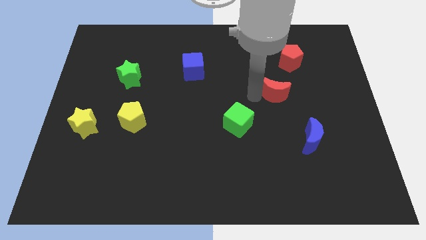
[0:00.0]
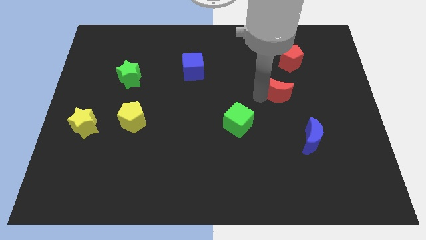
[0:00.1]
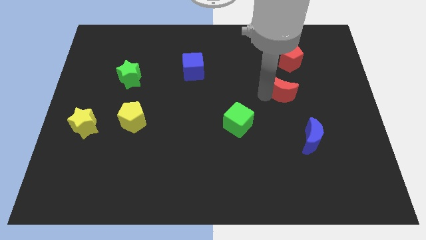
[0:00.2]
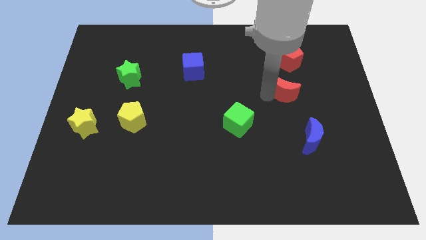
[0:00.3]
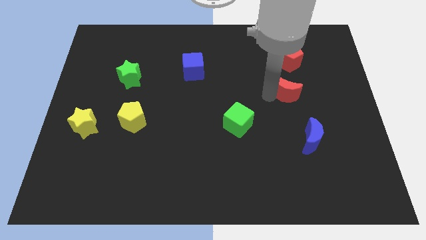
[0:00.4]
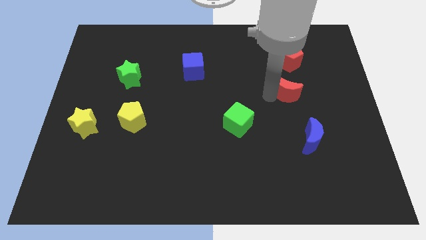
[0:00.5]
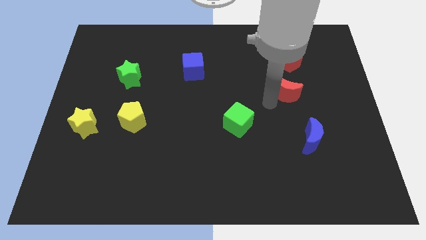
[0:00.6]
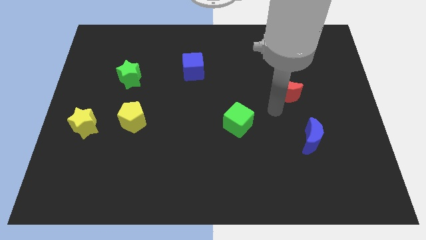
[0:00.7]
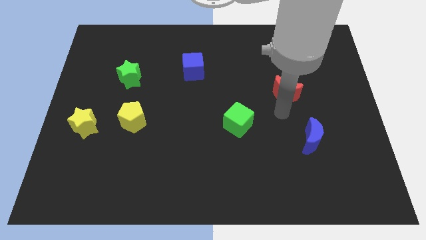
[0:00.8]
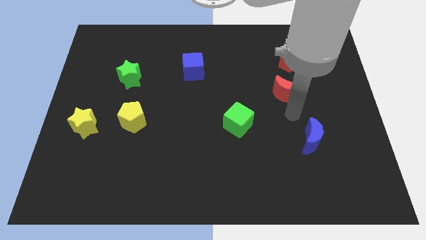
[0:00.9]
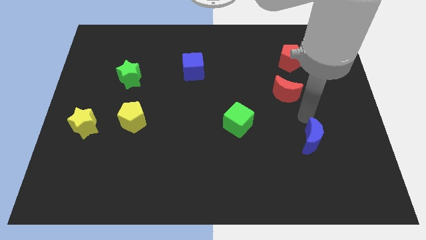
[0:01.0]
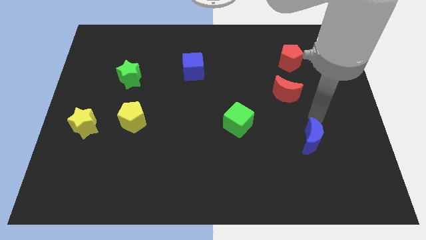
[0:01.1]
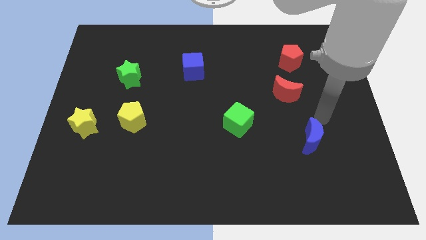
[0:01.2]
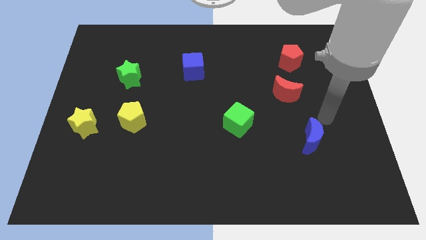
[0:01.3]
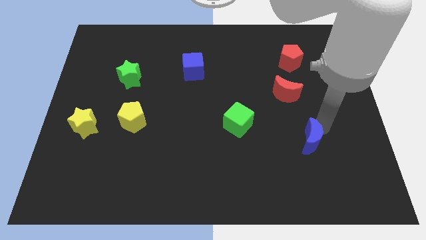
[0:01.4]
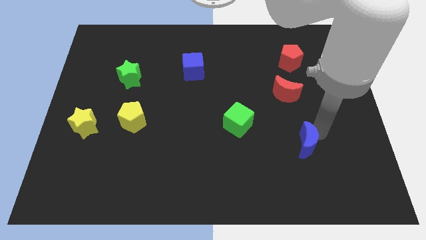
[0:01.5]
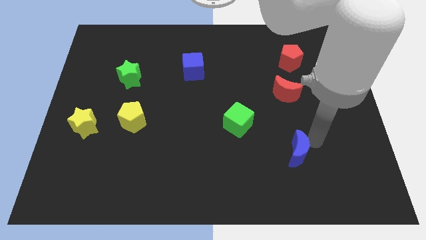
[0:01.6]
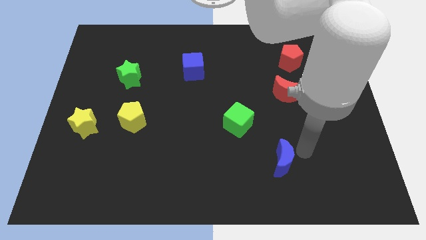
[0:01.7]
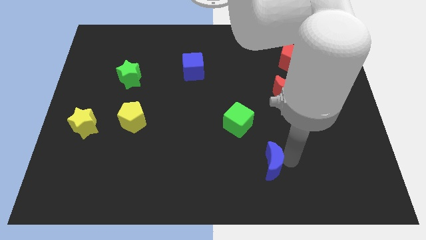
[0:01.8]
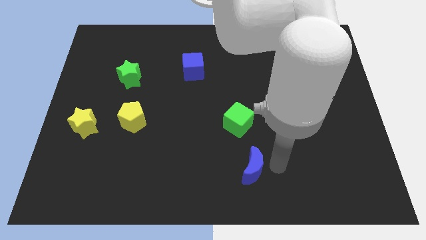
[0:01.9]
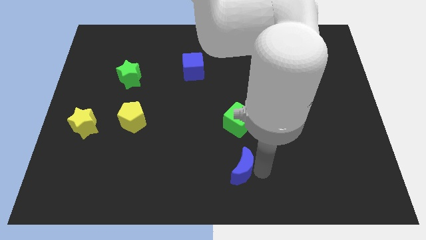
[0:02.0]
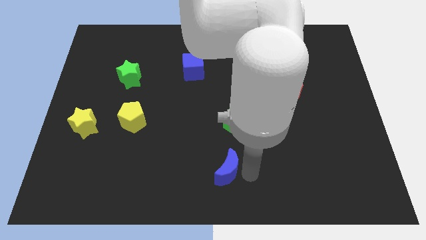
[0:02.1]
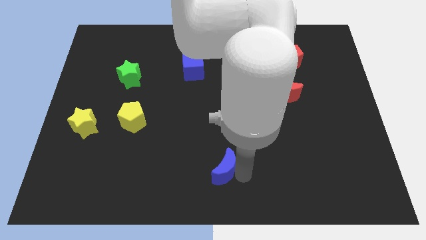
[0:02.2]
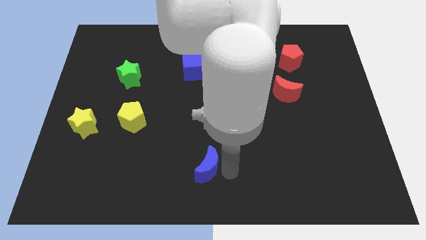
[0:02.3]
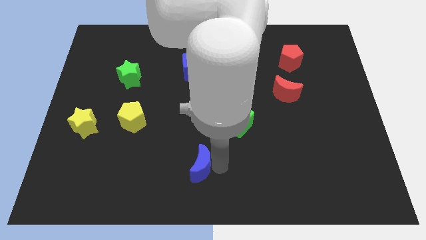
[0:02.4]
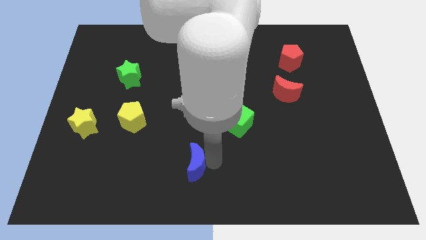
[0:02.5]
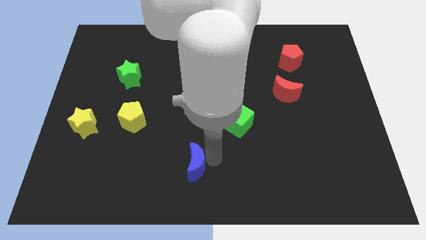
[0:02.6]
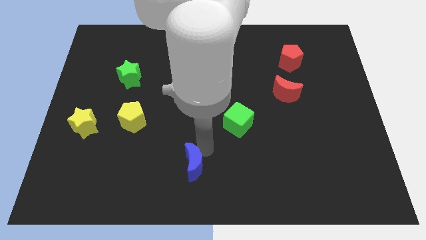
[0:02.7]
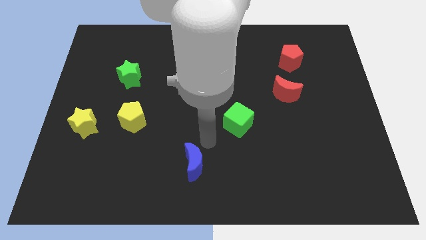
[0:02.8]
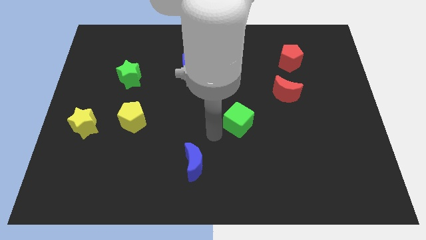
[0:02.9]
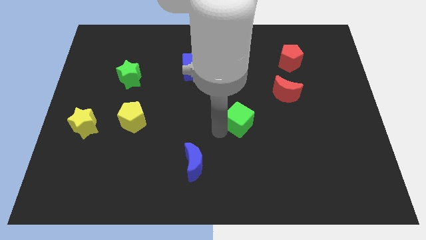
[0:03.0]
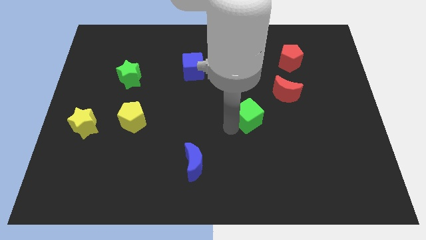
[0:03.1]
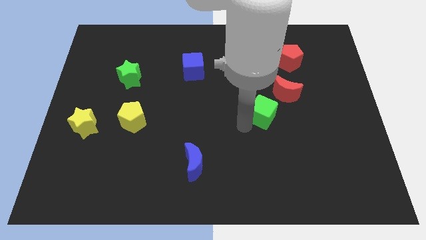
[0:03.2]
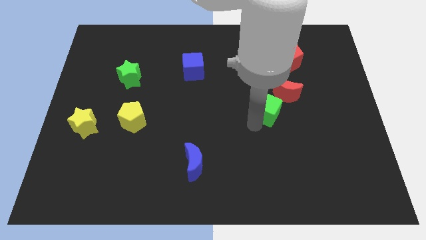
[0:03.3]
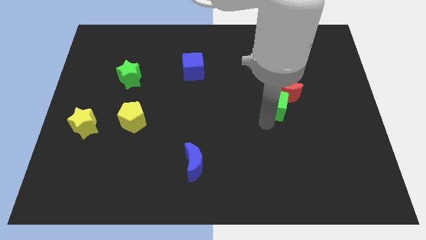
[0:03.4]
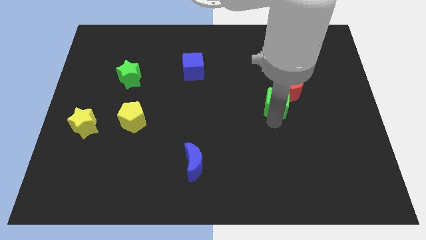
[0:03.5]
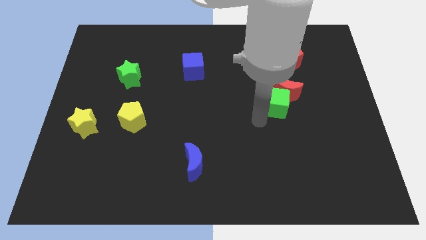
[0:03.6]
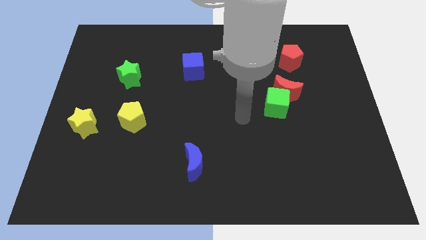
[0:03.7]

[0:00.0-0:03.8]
place the blue moon diagonally bottom left to the green star

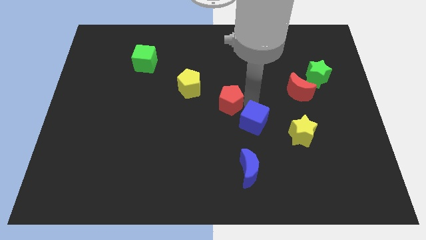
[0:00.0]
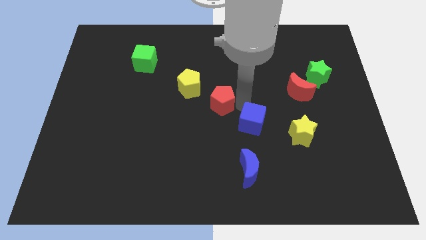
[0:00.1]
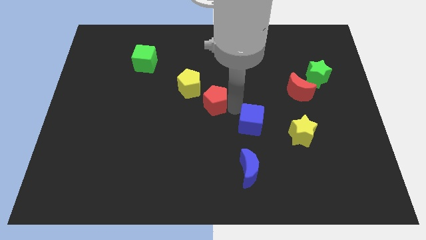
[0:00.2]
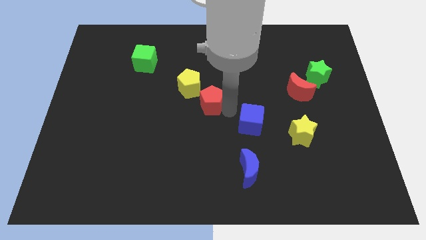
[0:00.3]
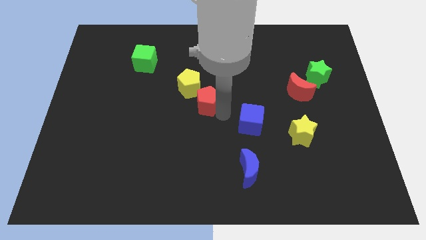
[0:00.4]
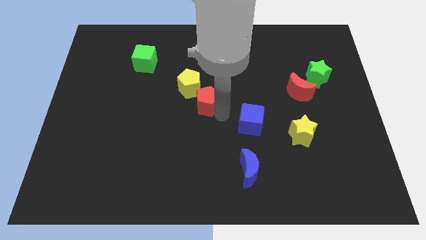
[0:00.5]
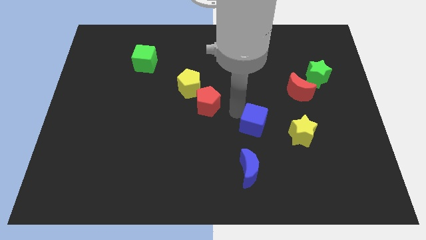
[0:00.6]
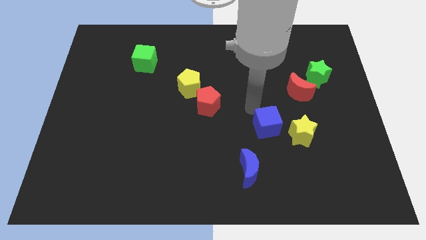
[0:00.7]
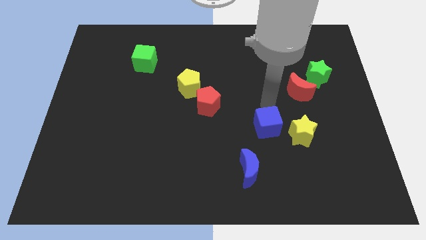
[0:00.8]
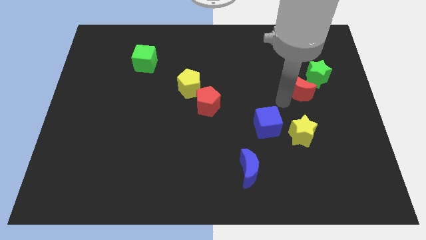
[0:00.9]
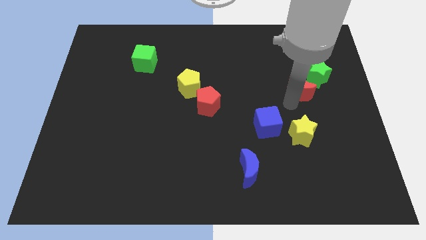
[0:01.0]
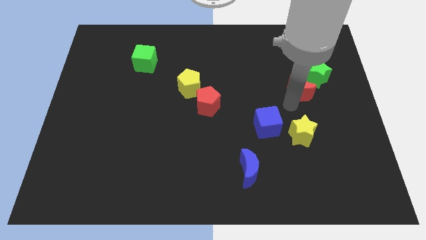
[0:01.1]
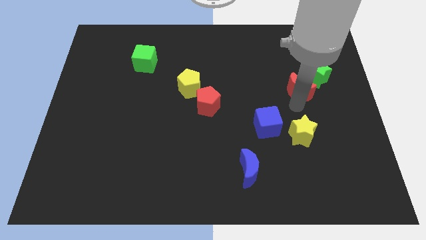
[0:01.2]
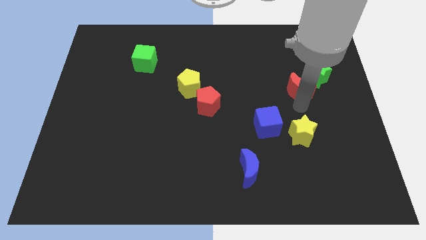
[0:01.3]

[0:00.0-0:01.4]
drag the red pentagon to the left

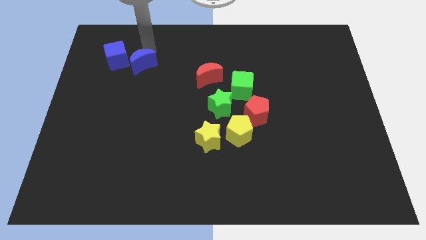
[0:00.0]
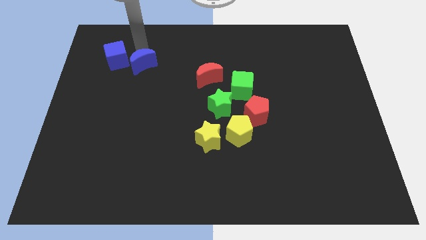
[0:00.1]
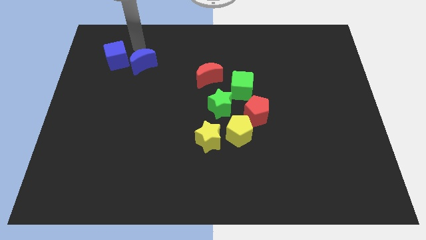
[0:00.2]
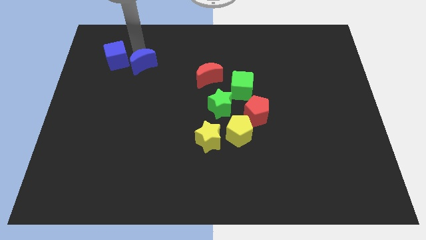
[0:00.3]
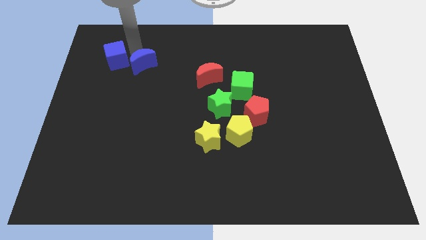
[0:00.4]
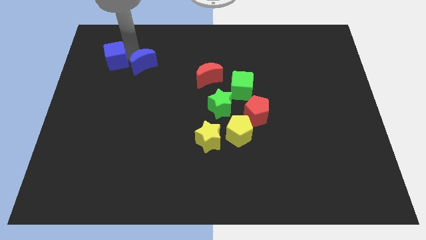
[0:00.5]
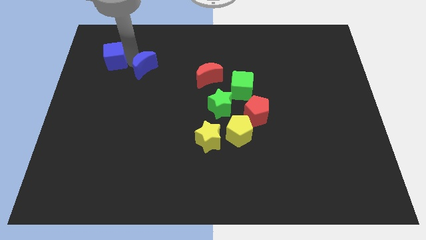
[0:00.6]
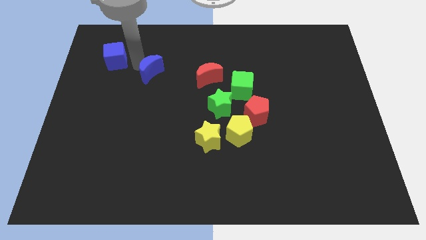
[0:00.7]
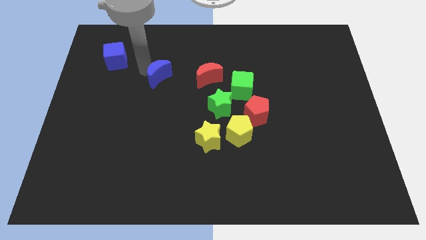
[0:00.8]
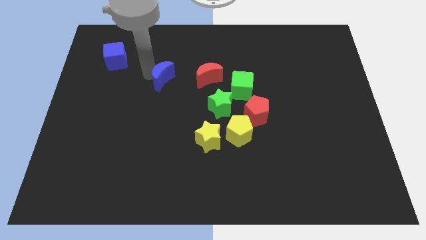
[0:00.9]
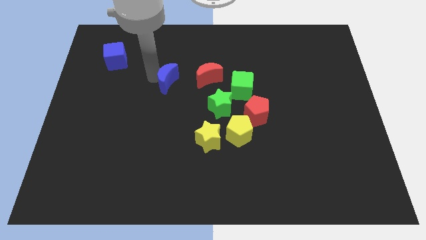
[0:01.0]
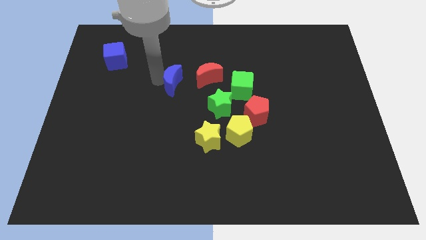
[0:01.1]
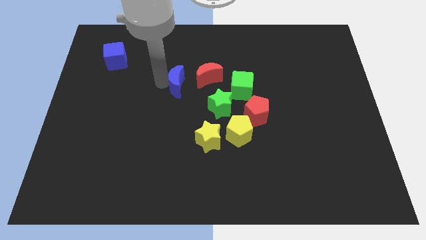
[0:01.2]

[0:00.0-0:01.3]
move the blue crescent towards the red crescent

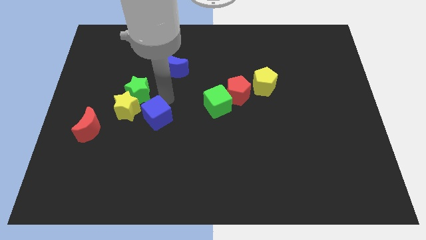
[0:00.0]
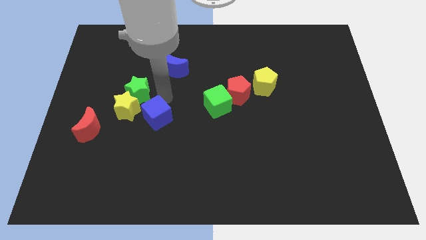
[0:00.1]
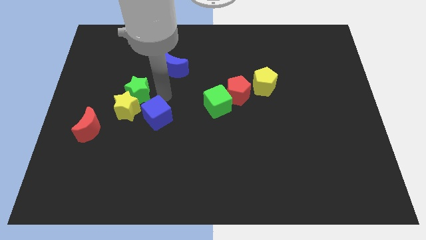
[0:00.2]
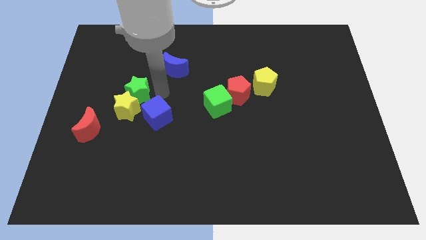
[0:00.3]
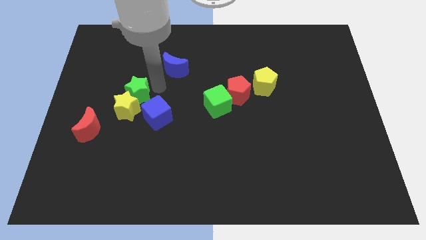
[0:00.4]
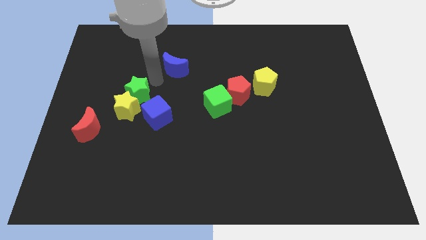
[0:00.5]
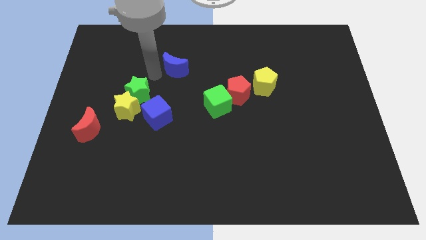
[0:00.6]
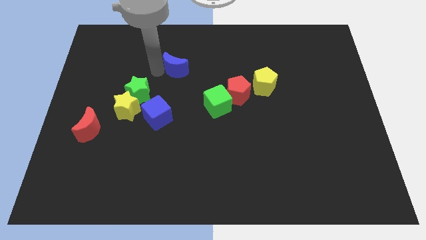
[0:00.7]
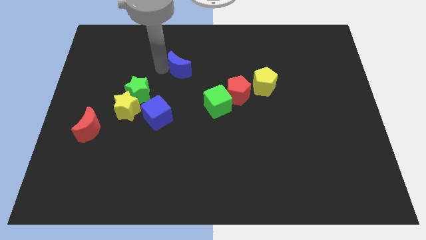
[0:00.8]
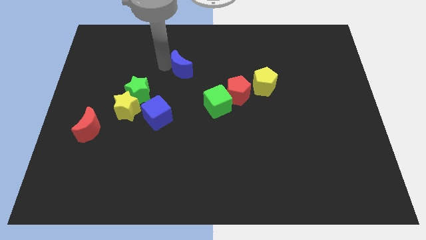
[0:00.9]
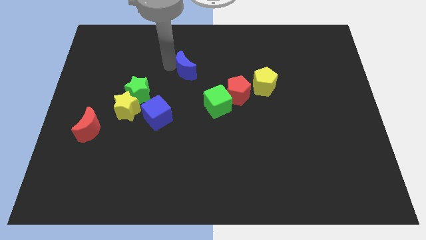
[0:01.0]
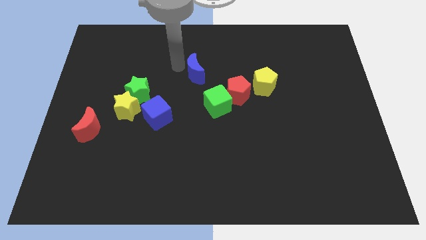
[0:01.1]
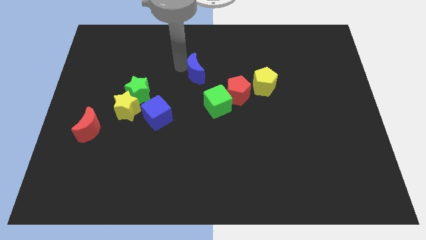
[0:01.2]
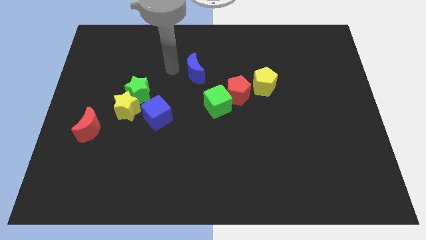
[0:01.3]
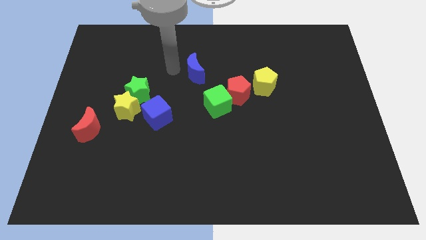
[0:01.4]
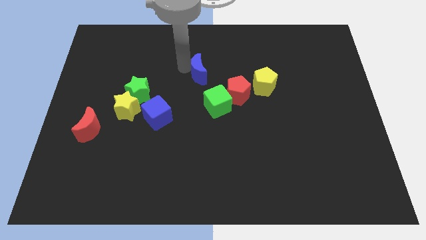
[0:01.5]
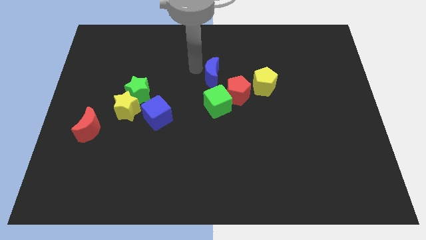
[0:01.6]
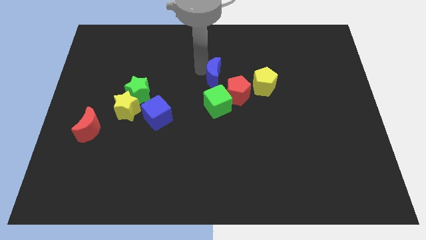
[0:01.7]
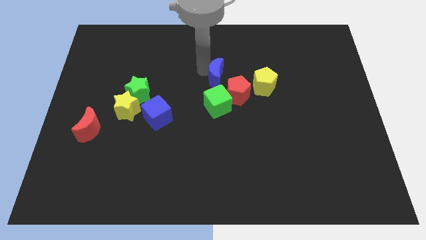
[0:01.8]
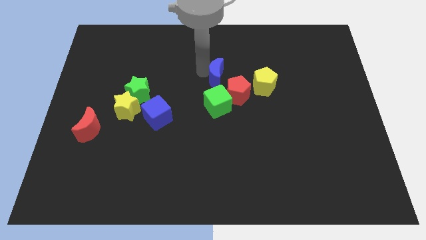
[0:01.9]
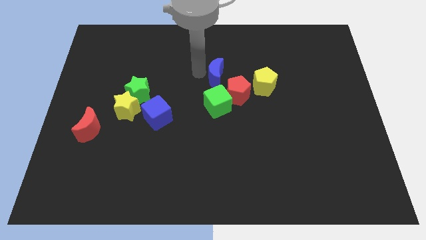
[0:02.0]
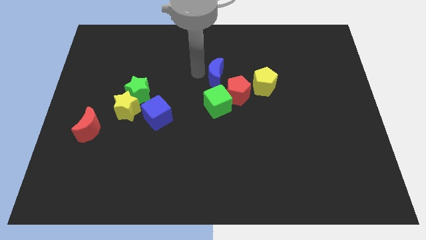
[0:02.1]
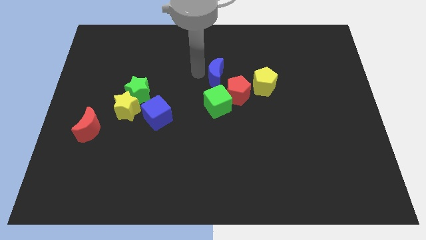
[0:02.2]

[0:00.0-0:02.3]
move the blue crescent above the green cube
